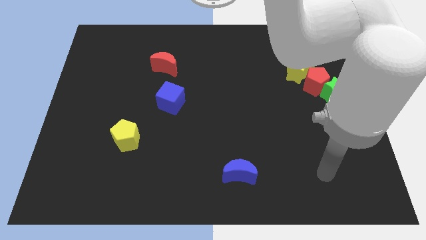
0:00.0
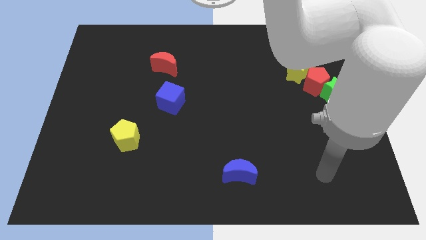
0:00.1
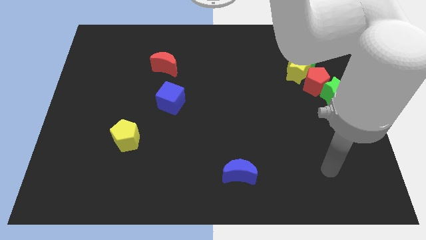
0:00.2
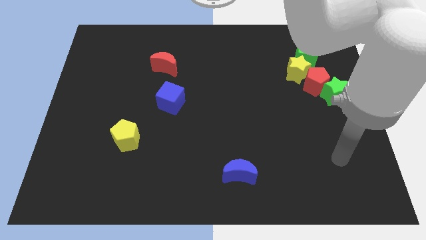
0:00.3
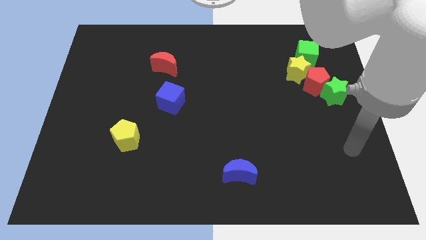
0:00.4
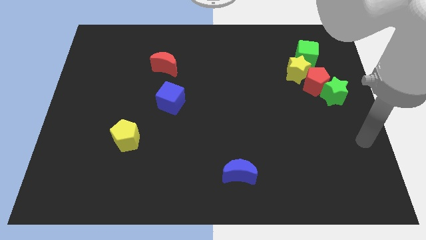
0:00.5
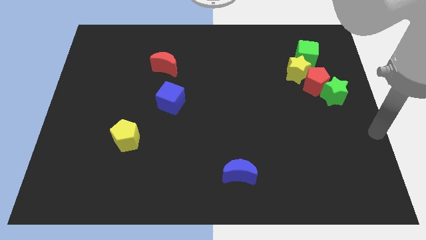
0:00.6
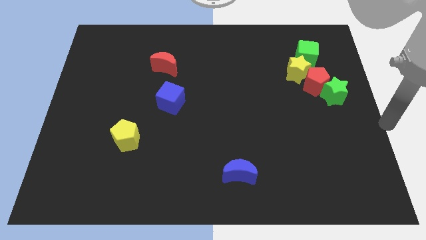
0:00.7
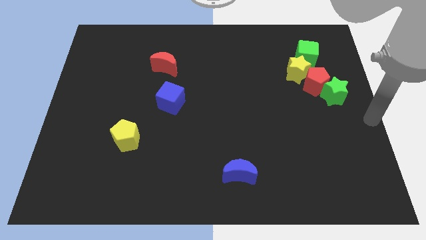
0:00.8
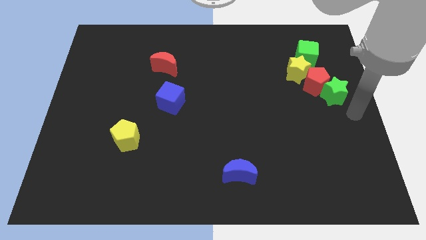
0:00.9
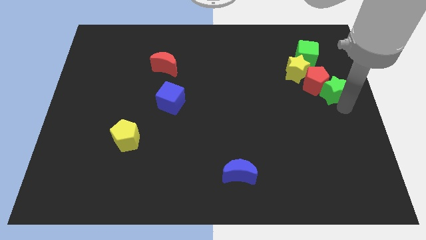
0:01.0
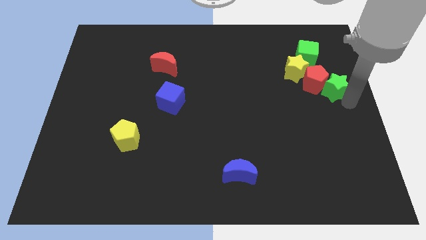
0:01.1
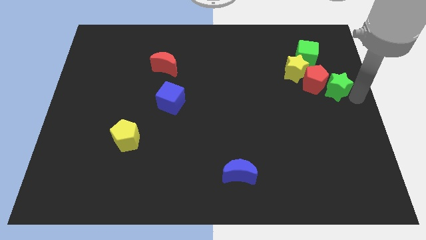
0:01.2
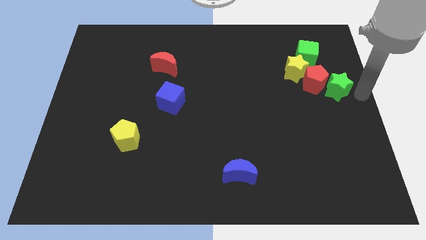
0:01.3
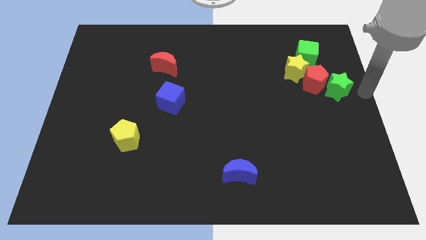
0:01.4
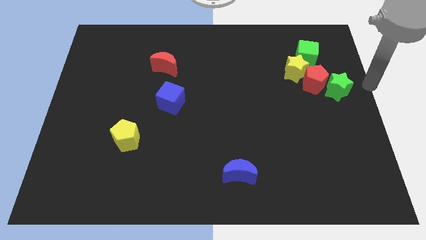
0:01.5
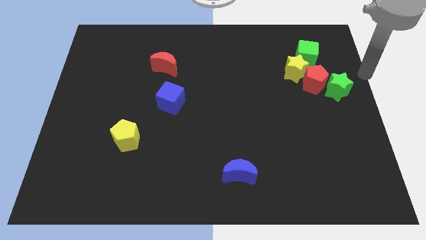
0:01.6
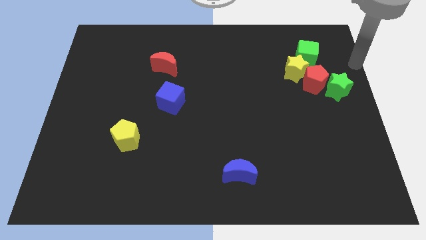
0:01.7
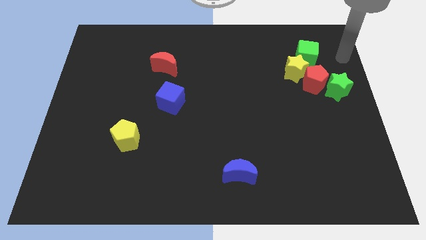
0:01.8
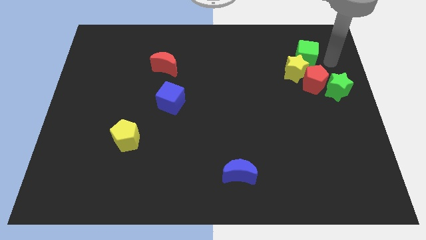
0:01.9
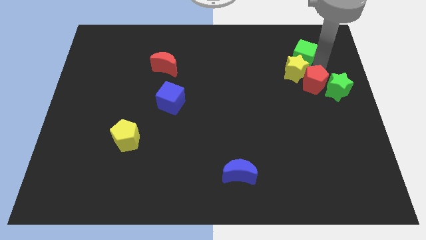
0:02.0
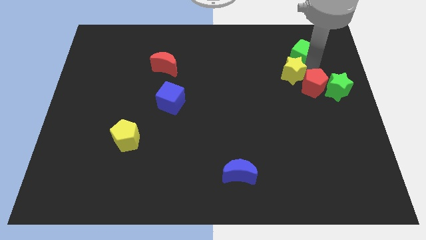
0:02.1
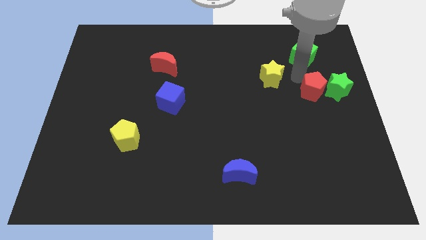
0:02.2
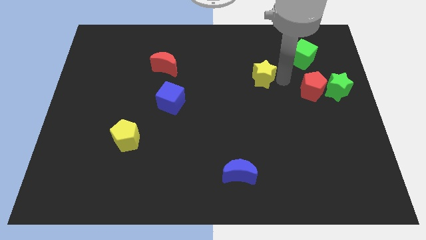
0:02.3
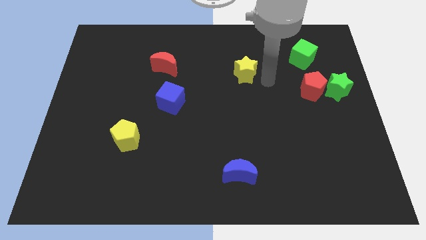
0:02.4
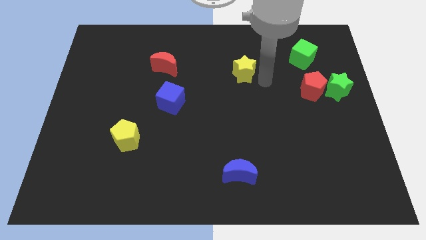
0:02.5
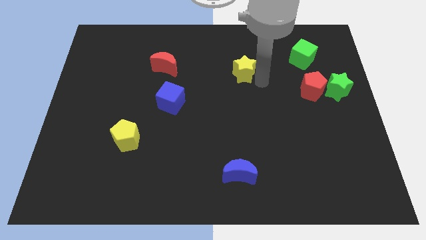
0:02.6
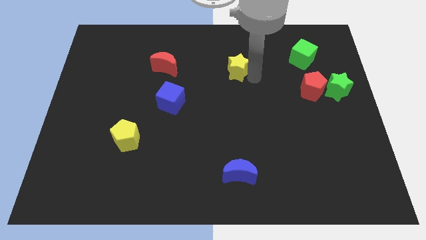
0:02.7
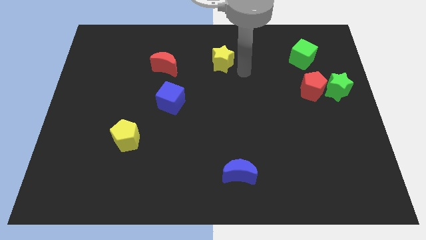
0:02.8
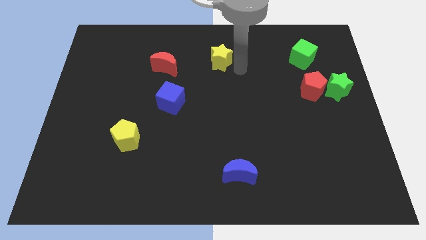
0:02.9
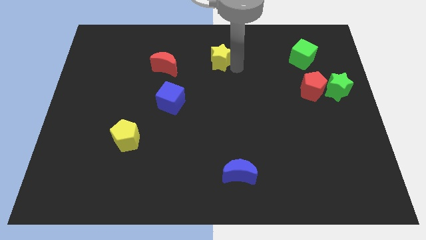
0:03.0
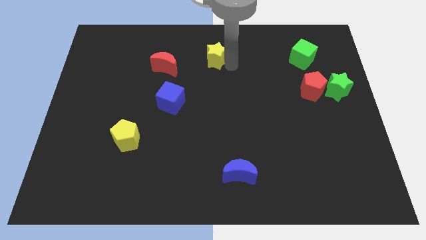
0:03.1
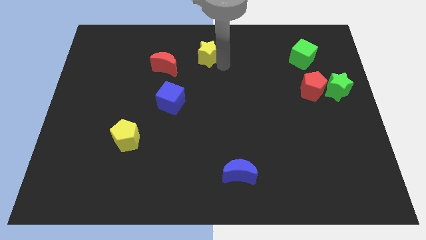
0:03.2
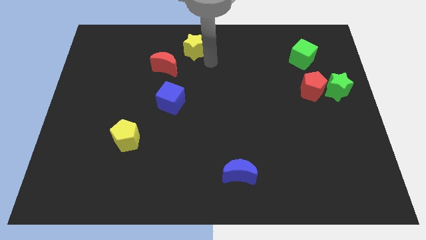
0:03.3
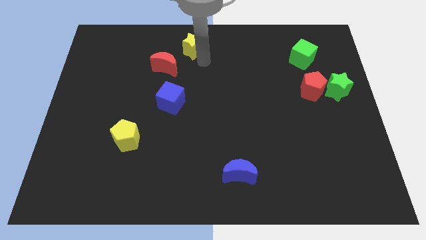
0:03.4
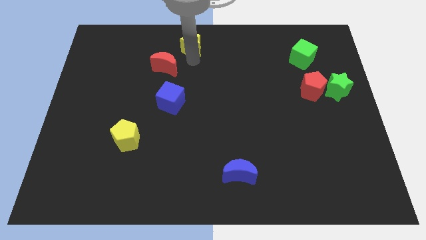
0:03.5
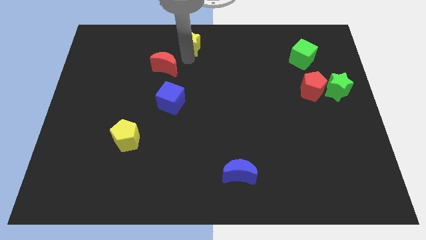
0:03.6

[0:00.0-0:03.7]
separate the yellow star from the group of blocks

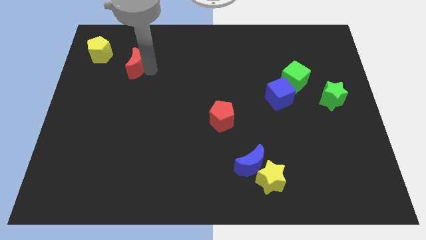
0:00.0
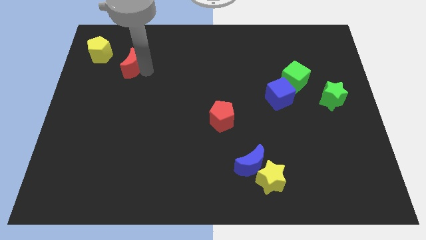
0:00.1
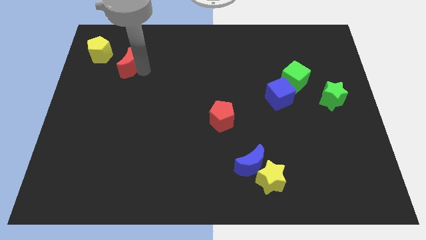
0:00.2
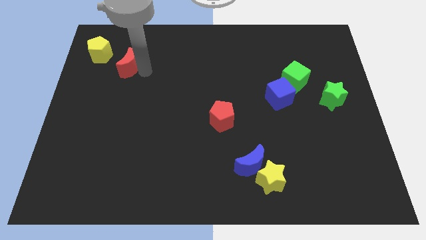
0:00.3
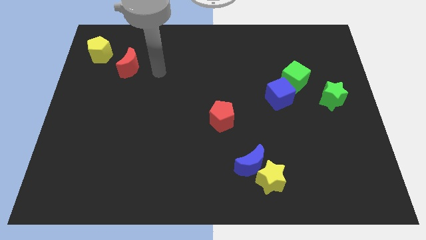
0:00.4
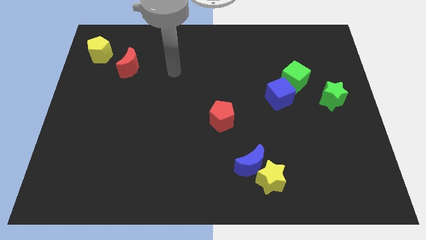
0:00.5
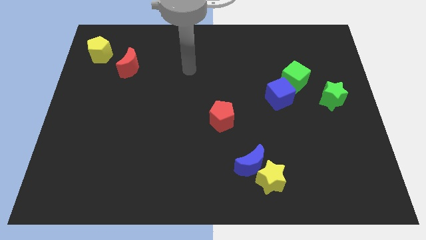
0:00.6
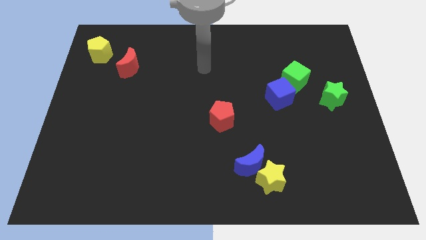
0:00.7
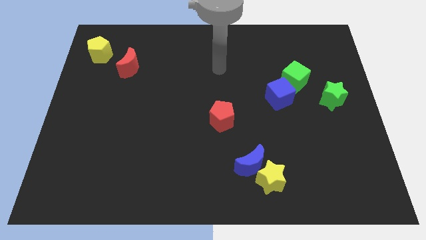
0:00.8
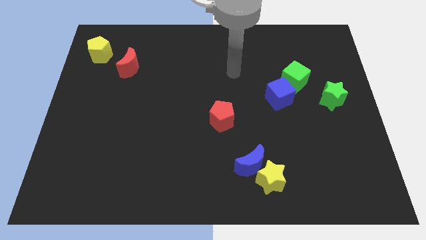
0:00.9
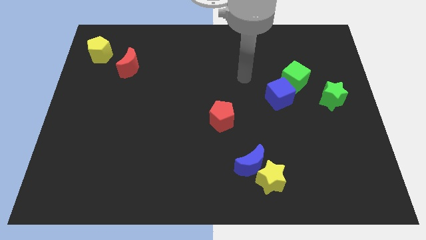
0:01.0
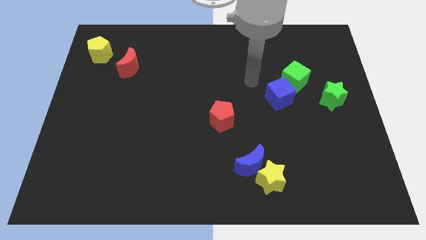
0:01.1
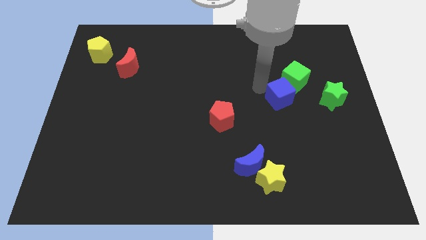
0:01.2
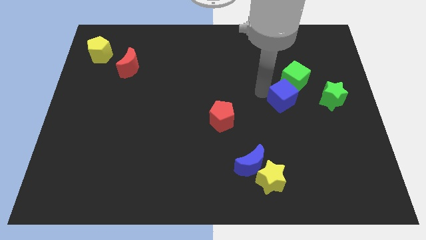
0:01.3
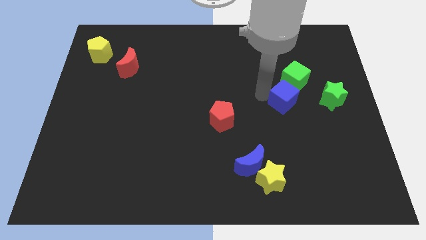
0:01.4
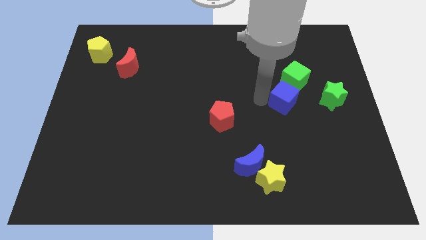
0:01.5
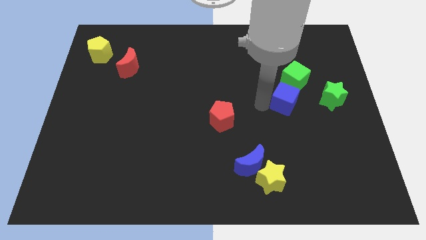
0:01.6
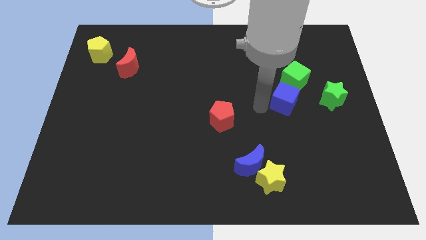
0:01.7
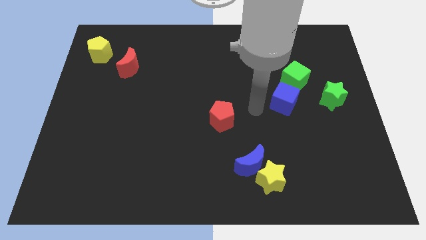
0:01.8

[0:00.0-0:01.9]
point the arm close to the blue cube

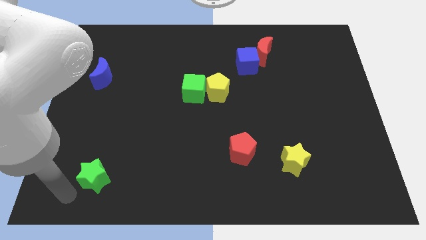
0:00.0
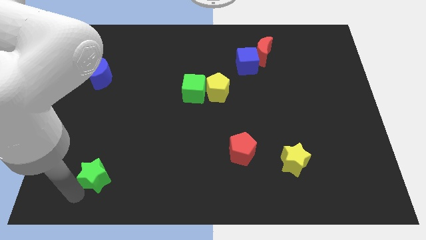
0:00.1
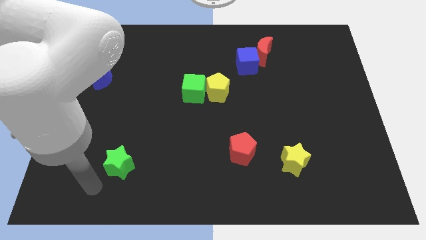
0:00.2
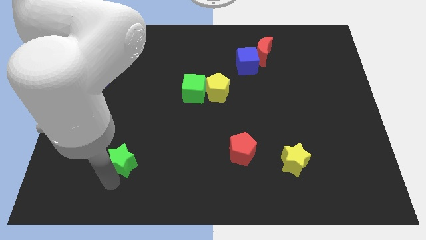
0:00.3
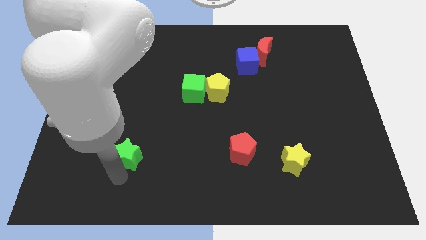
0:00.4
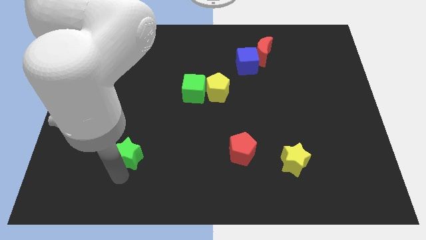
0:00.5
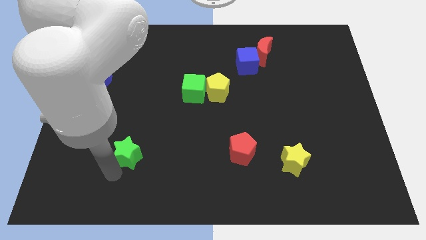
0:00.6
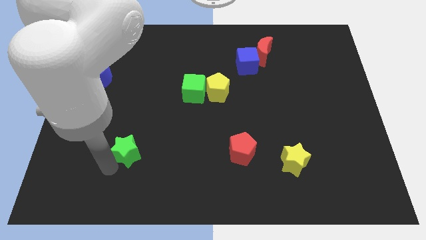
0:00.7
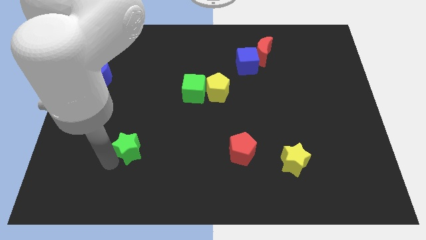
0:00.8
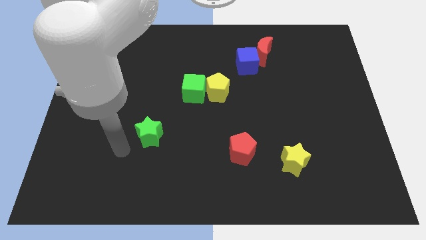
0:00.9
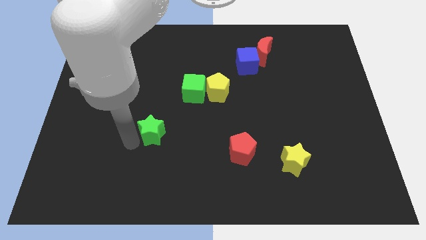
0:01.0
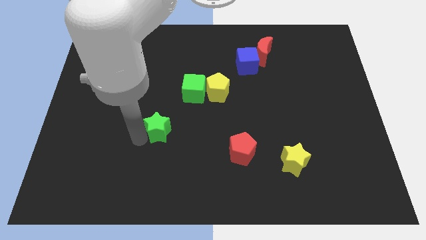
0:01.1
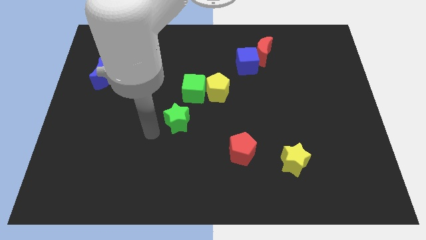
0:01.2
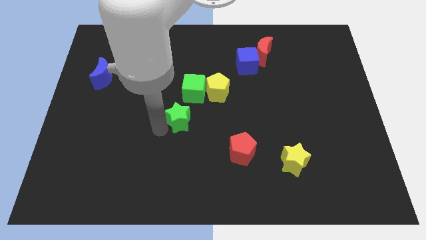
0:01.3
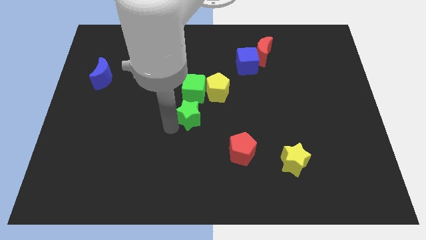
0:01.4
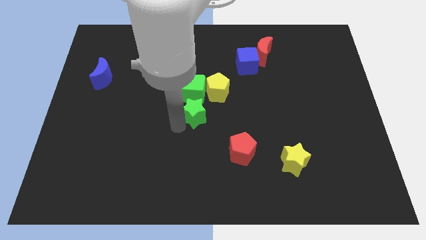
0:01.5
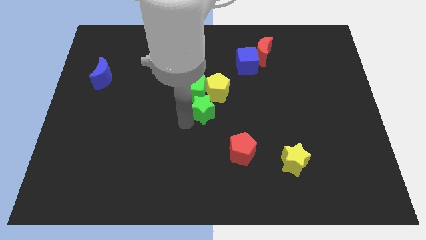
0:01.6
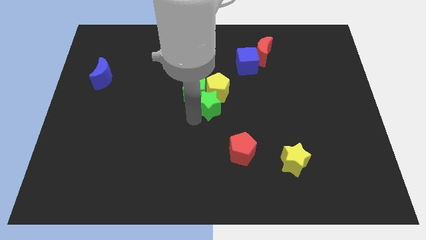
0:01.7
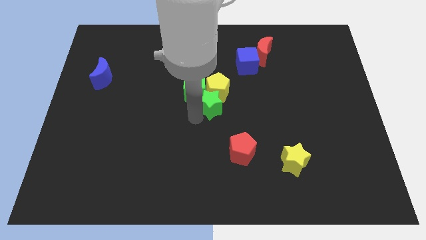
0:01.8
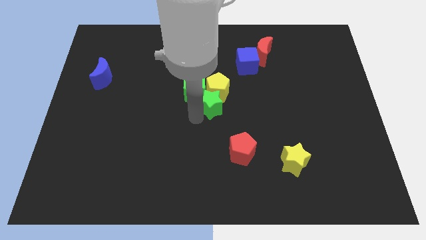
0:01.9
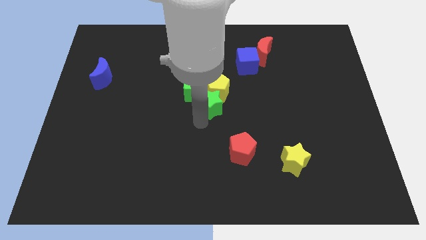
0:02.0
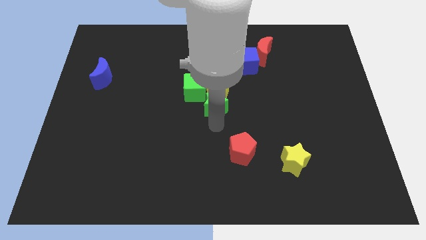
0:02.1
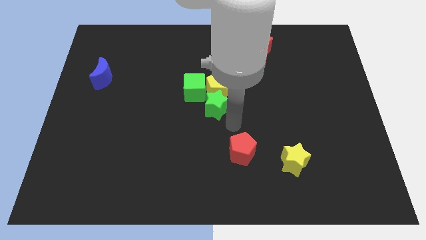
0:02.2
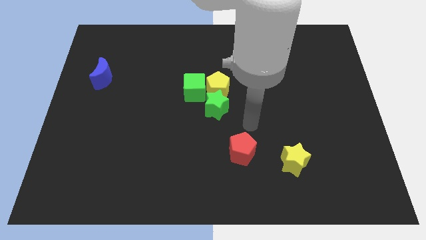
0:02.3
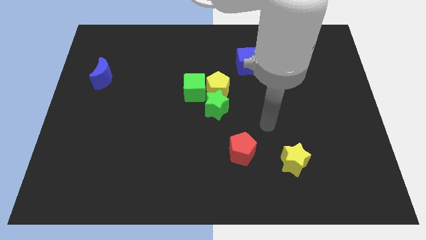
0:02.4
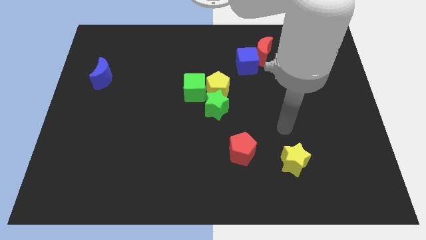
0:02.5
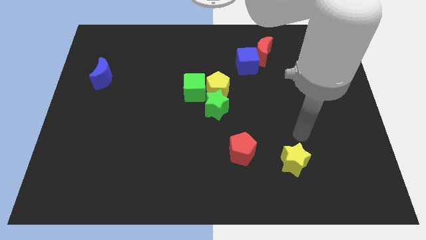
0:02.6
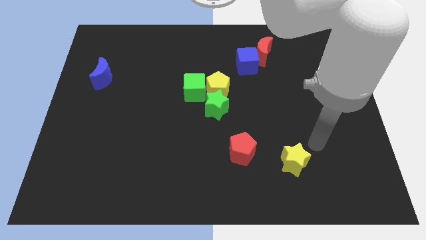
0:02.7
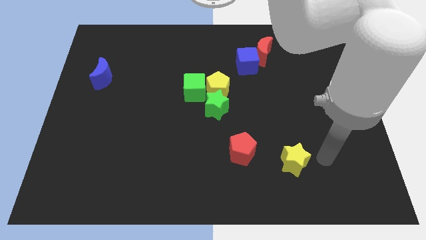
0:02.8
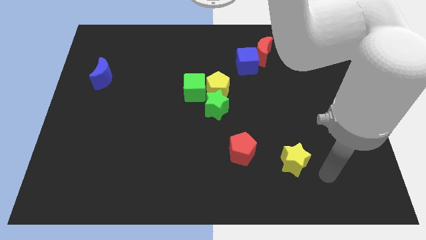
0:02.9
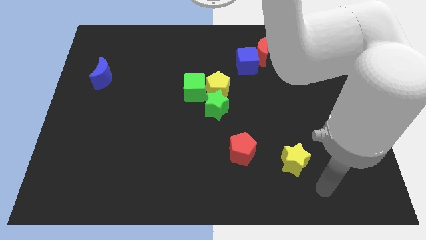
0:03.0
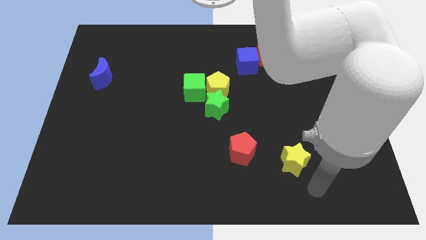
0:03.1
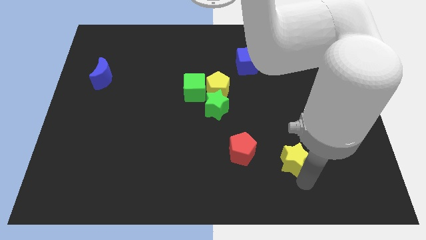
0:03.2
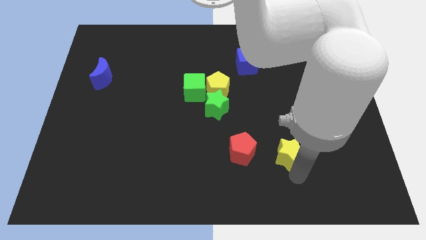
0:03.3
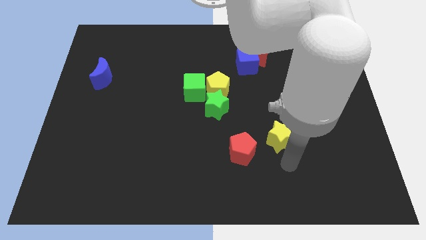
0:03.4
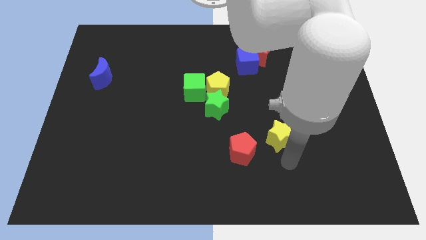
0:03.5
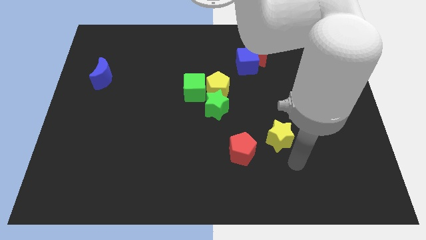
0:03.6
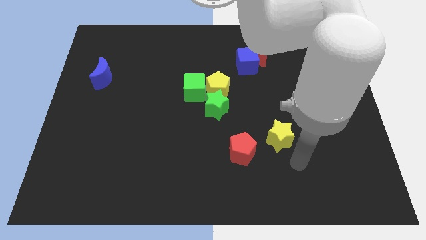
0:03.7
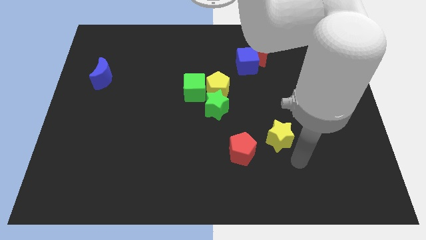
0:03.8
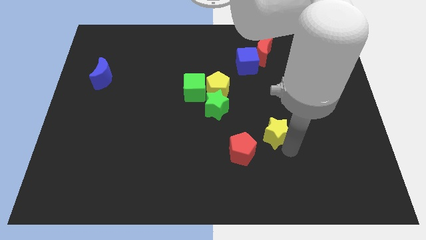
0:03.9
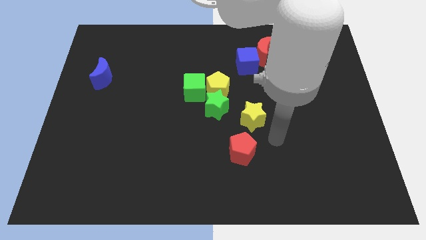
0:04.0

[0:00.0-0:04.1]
move the green star into the yellow pentagon
